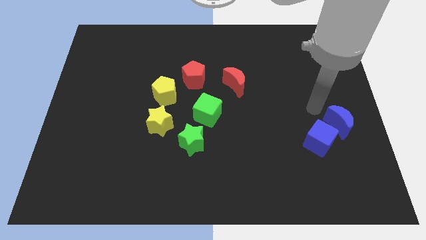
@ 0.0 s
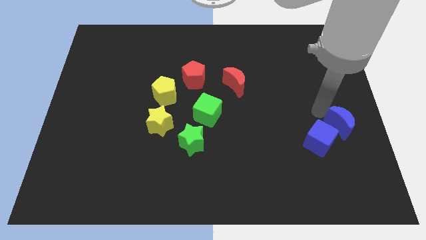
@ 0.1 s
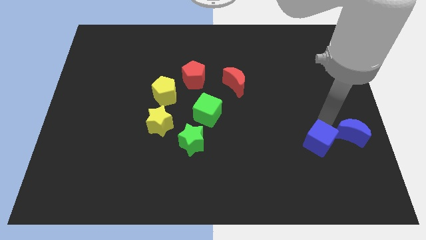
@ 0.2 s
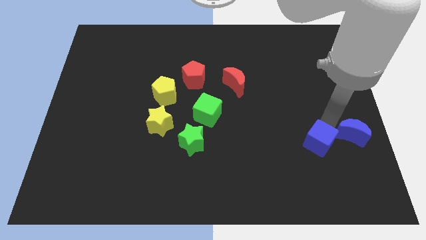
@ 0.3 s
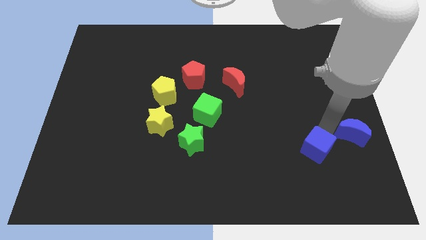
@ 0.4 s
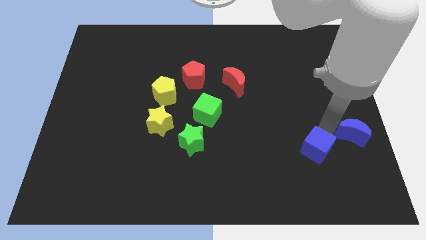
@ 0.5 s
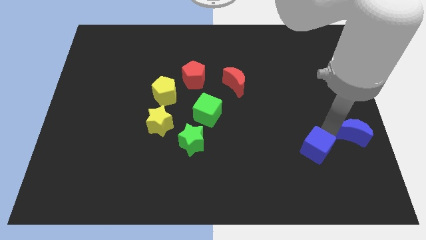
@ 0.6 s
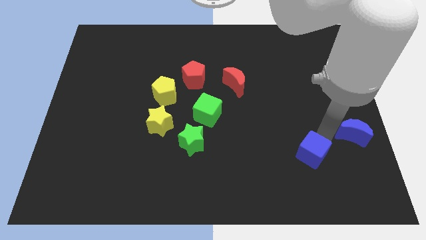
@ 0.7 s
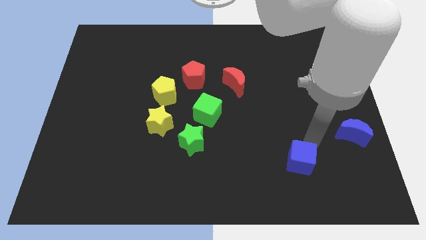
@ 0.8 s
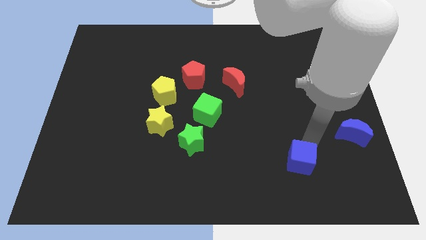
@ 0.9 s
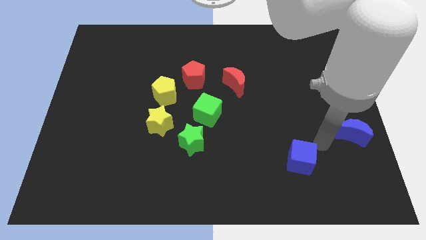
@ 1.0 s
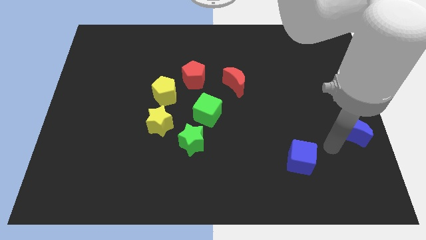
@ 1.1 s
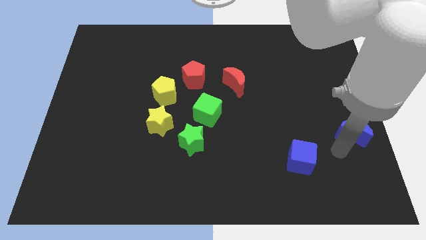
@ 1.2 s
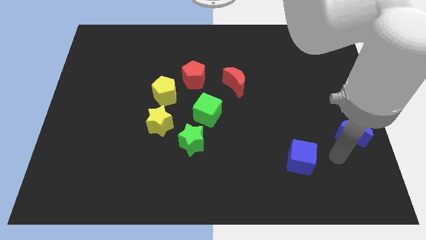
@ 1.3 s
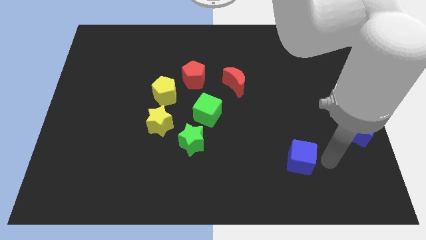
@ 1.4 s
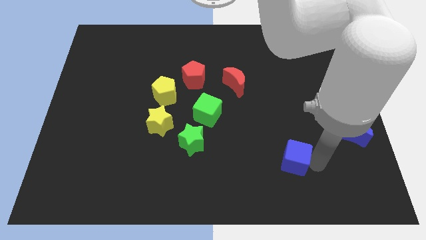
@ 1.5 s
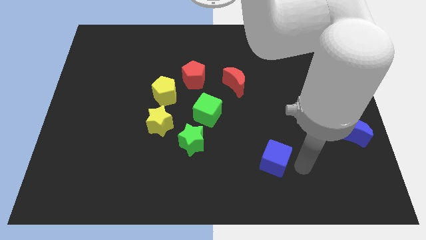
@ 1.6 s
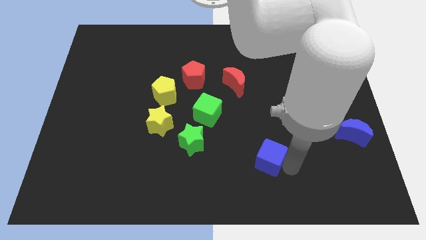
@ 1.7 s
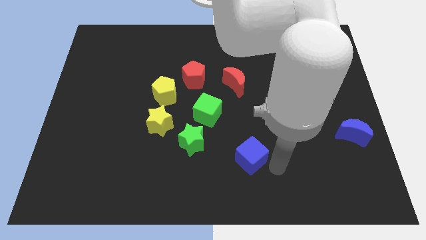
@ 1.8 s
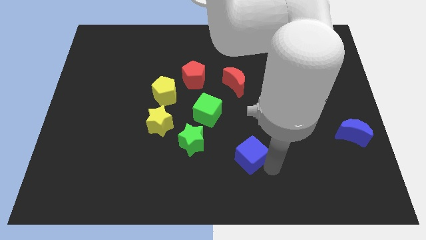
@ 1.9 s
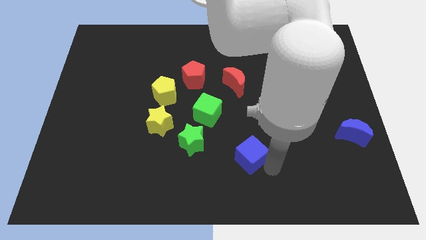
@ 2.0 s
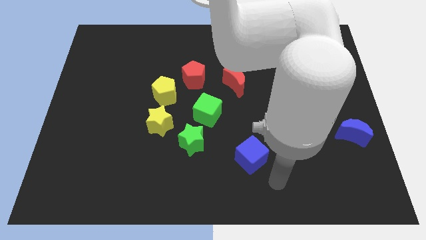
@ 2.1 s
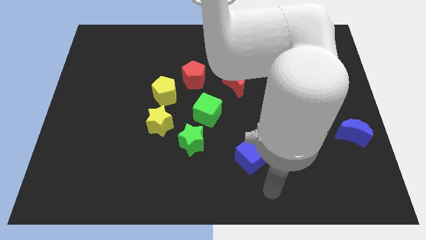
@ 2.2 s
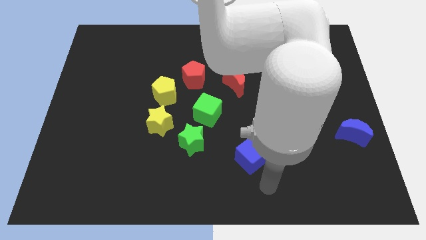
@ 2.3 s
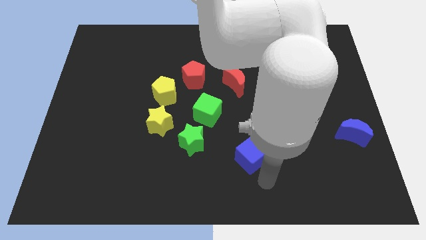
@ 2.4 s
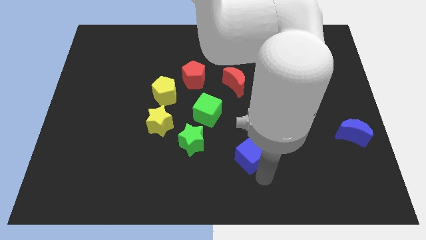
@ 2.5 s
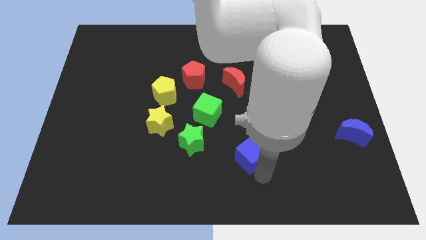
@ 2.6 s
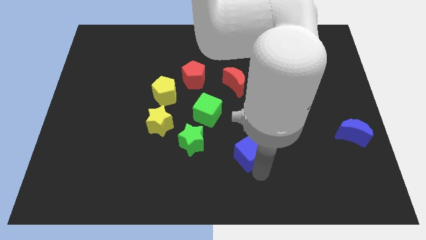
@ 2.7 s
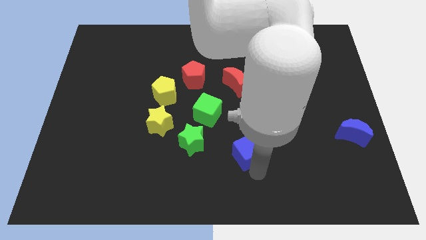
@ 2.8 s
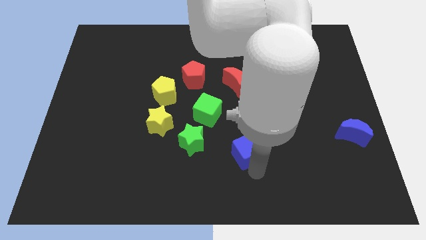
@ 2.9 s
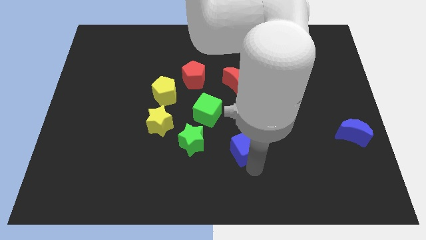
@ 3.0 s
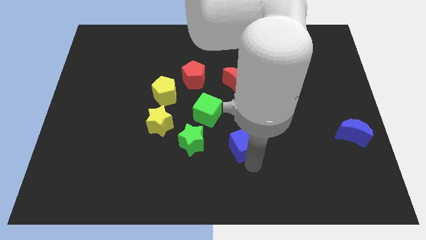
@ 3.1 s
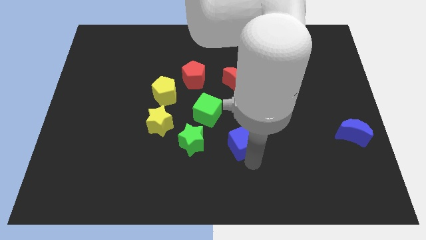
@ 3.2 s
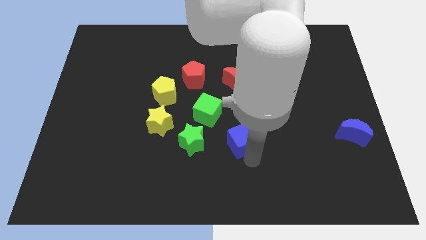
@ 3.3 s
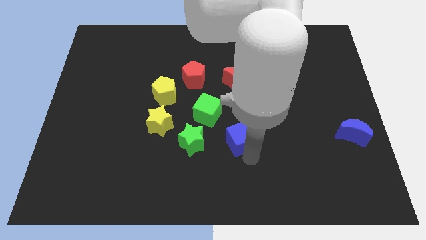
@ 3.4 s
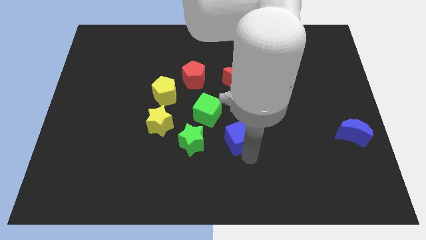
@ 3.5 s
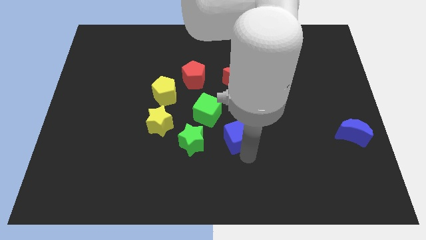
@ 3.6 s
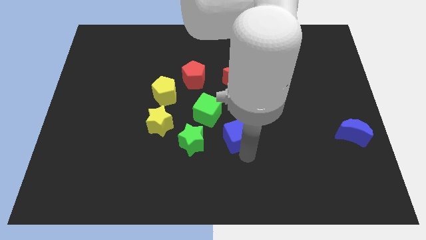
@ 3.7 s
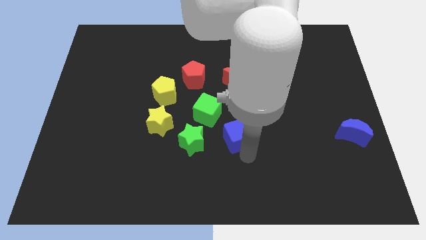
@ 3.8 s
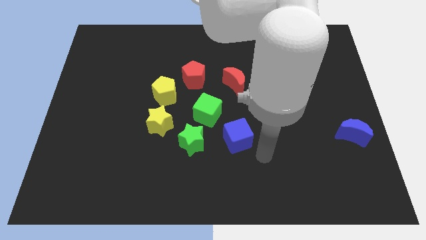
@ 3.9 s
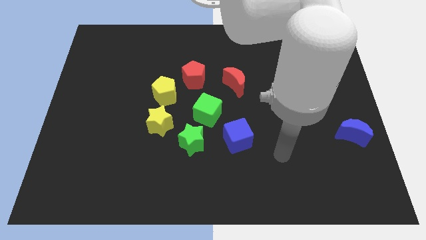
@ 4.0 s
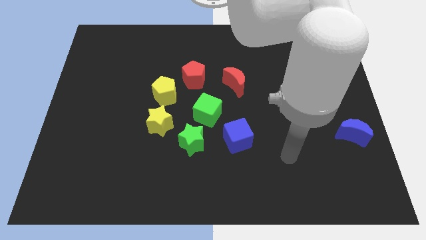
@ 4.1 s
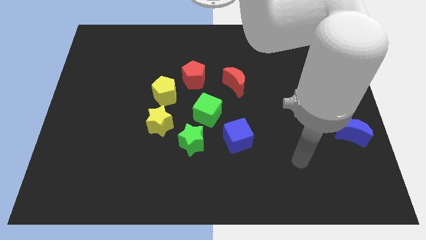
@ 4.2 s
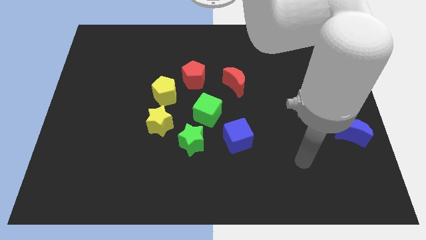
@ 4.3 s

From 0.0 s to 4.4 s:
push the blue cube to the center of the board

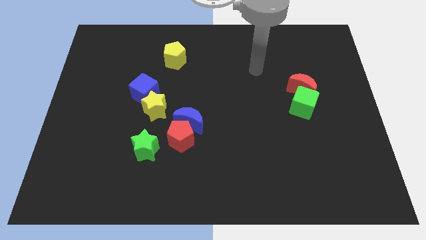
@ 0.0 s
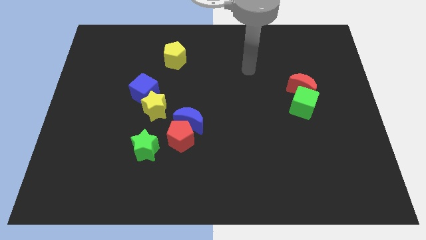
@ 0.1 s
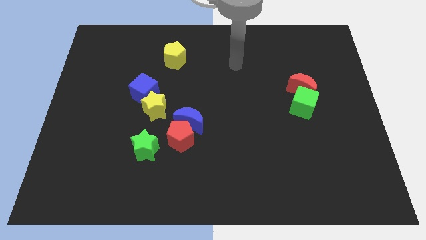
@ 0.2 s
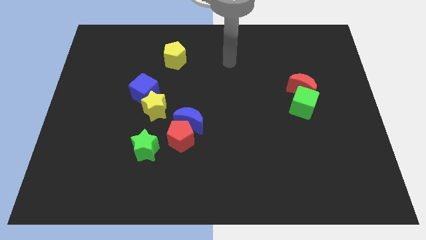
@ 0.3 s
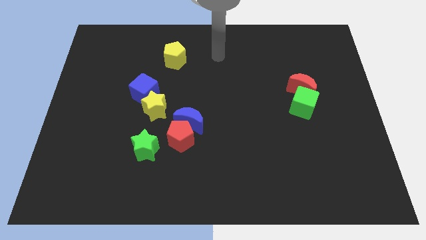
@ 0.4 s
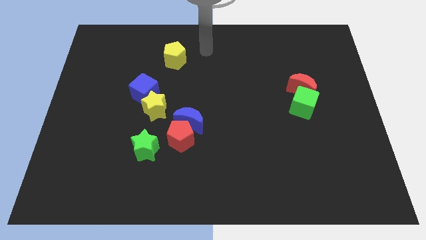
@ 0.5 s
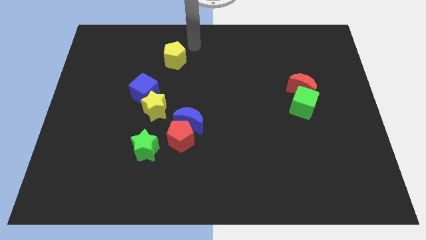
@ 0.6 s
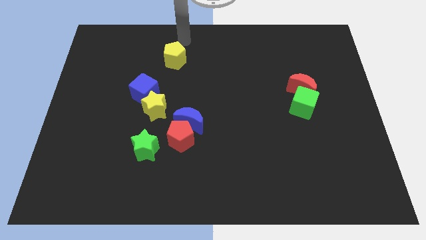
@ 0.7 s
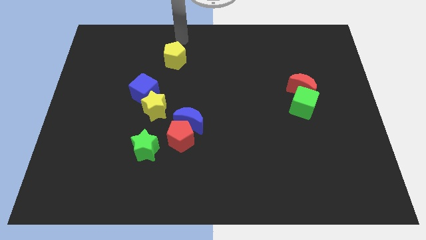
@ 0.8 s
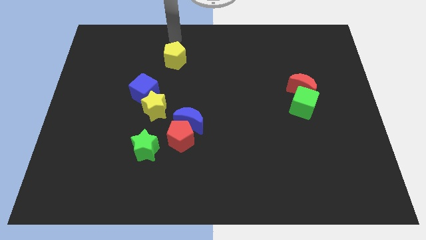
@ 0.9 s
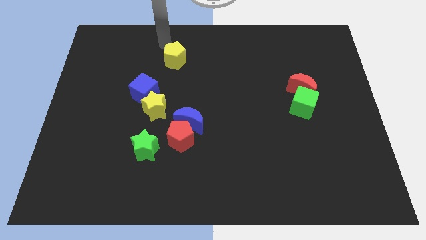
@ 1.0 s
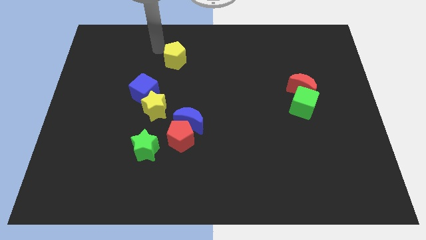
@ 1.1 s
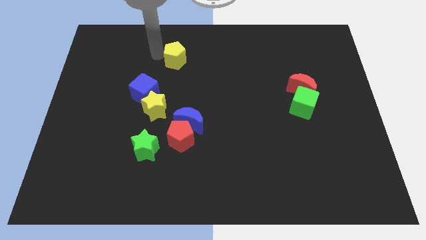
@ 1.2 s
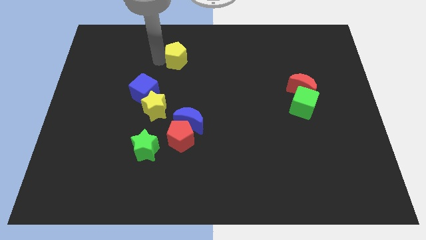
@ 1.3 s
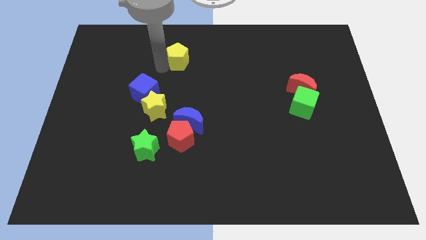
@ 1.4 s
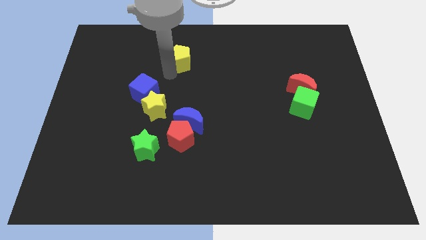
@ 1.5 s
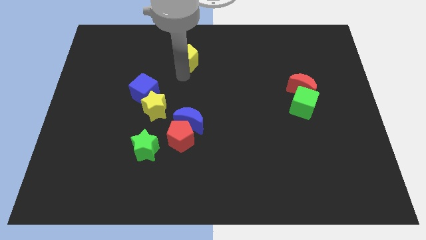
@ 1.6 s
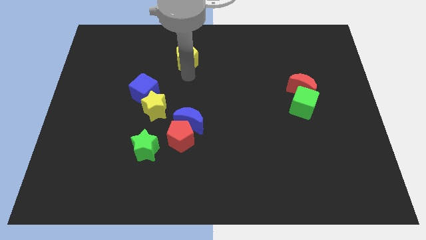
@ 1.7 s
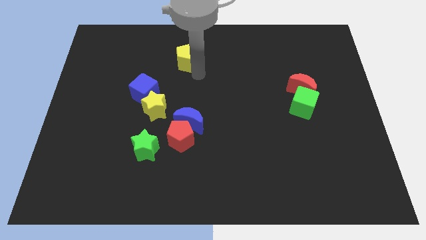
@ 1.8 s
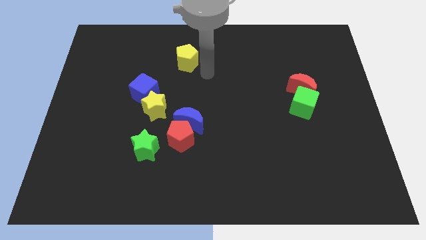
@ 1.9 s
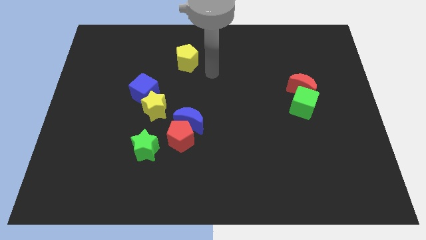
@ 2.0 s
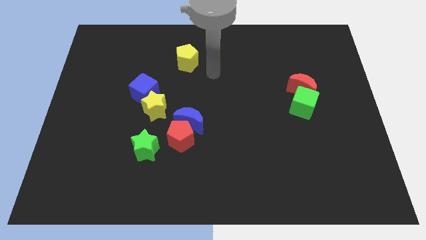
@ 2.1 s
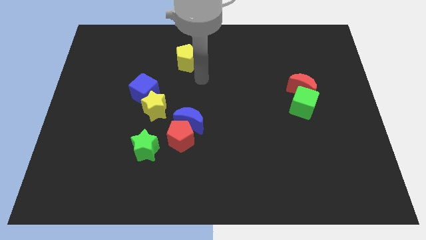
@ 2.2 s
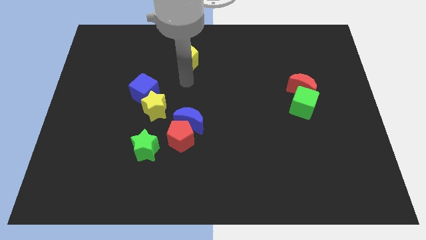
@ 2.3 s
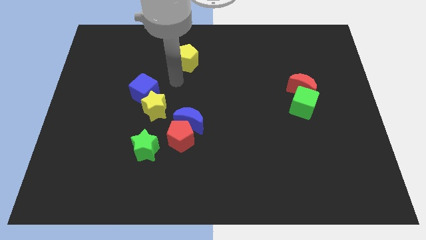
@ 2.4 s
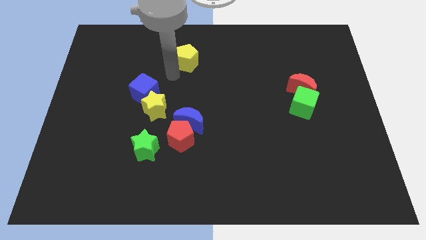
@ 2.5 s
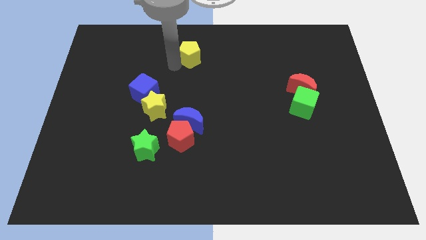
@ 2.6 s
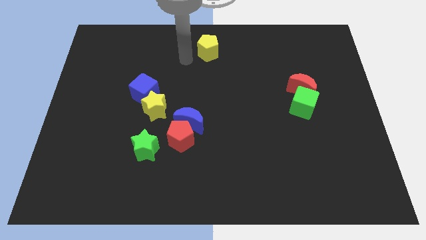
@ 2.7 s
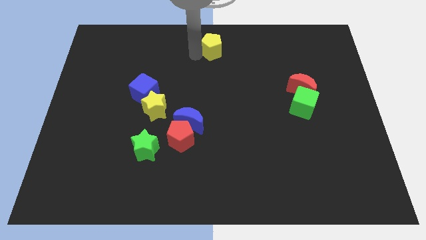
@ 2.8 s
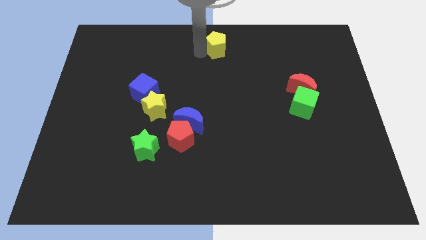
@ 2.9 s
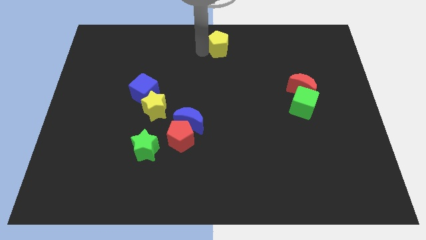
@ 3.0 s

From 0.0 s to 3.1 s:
slide the yelow pentagon to the top center of the table

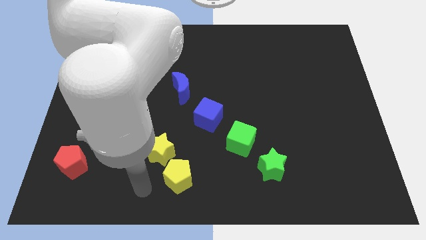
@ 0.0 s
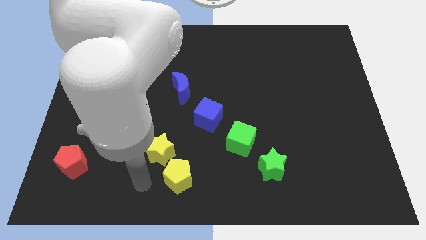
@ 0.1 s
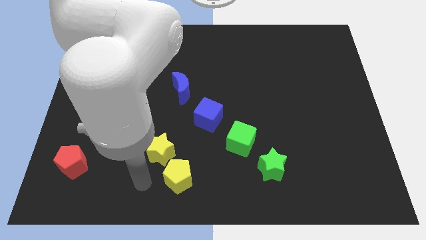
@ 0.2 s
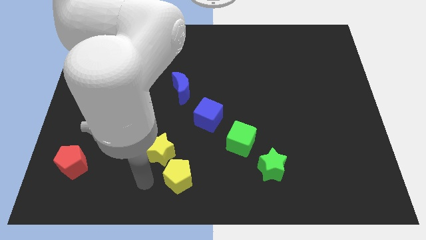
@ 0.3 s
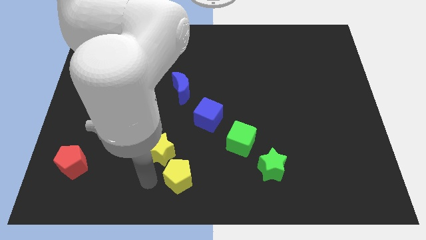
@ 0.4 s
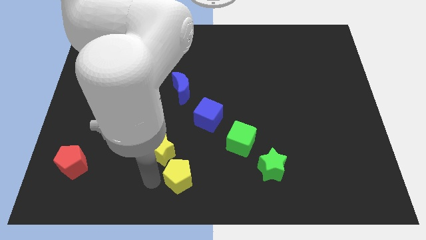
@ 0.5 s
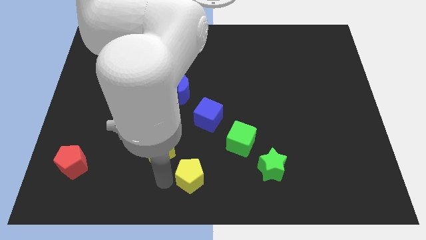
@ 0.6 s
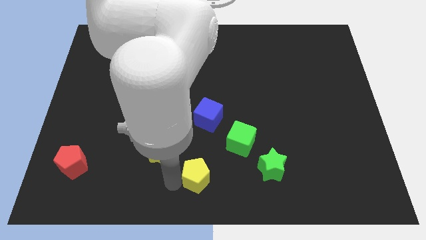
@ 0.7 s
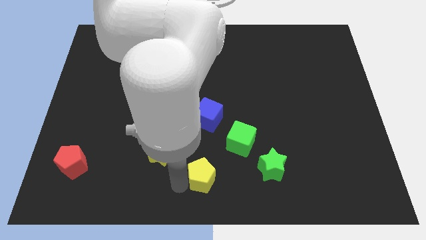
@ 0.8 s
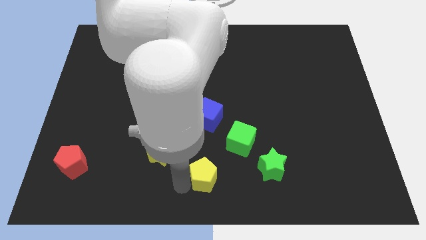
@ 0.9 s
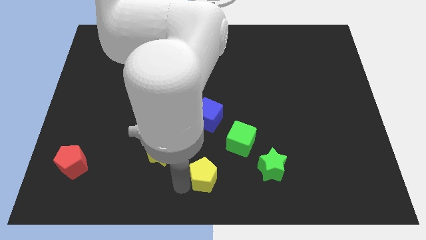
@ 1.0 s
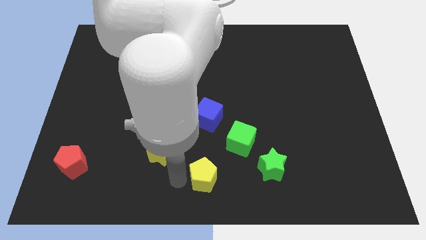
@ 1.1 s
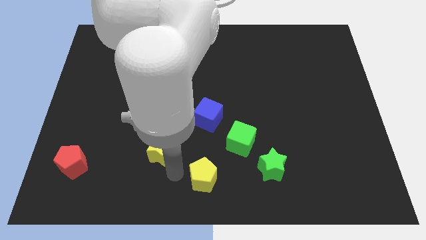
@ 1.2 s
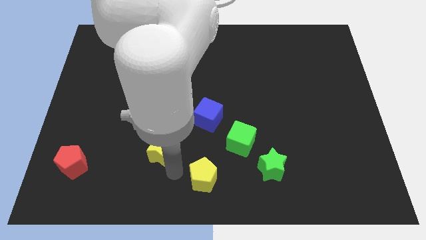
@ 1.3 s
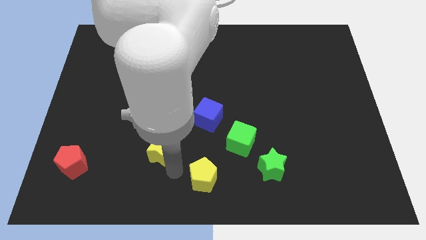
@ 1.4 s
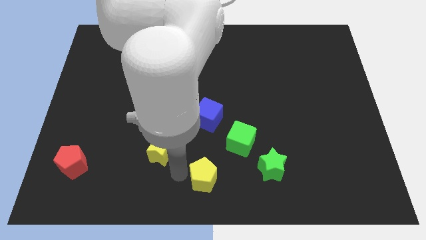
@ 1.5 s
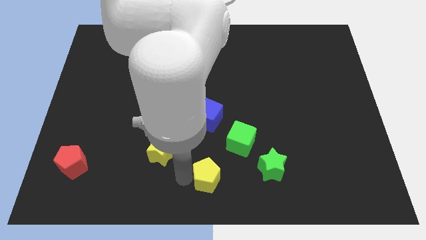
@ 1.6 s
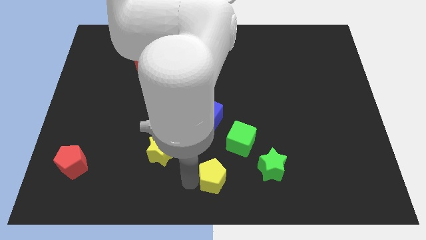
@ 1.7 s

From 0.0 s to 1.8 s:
place the yellow pentagon at the bottom center of the board
